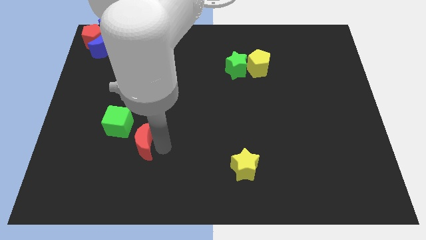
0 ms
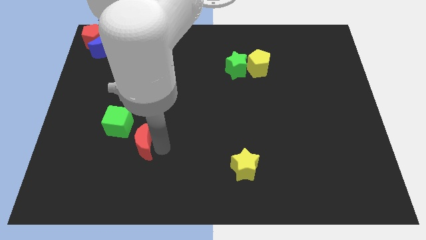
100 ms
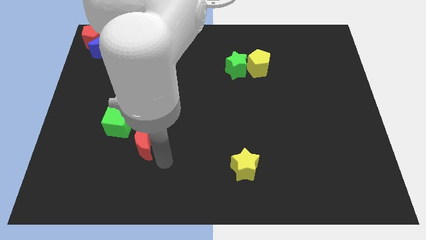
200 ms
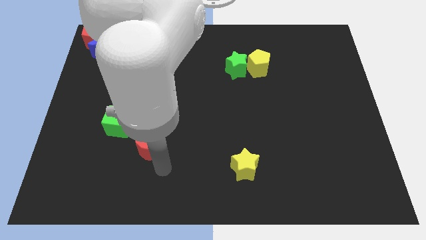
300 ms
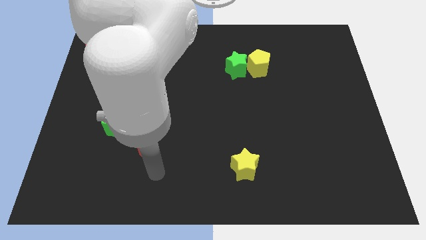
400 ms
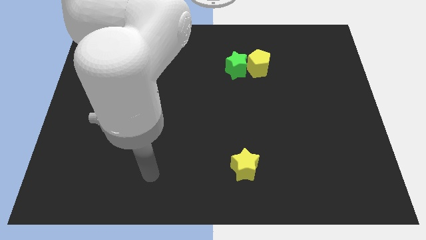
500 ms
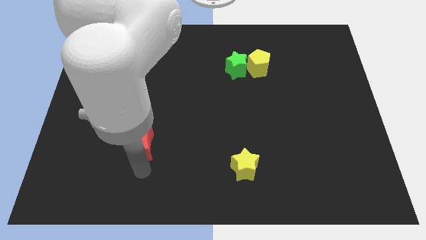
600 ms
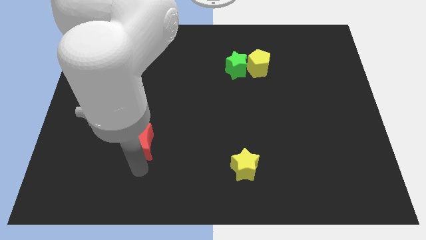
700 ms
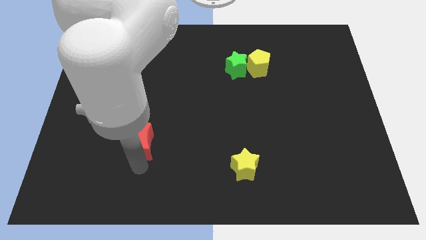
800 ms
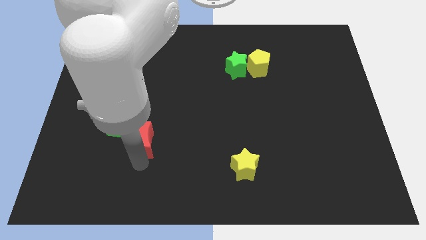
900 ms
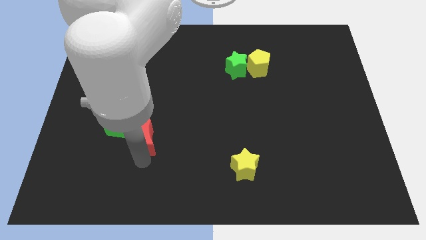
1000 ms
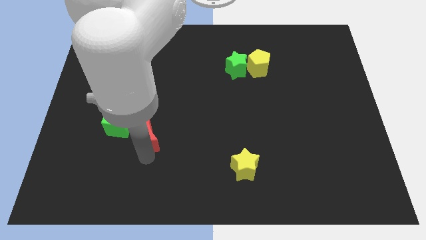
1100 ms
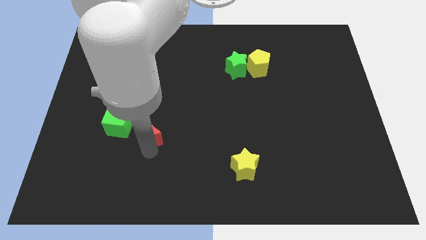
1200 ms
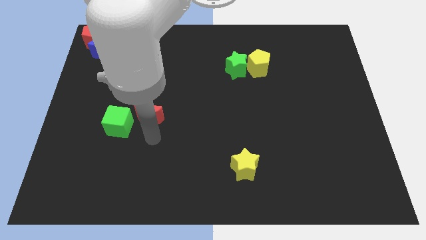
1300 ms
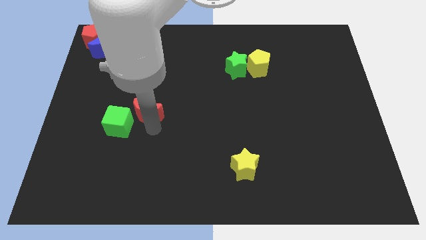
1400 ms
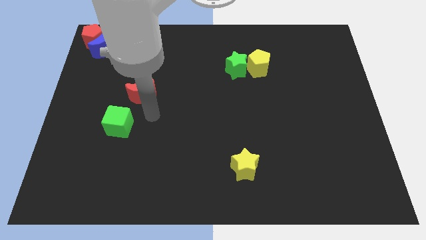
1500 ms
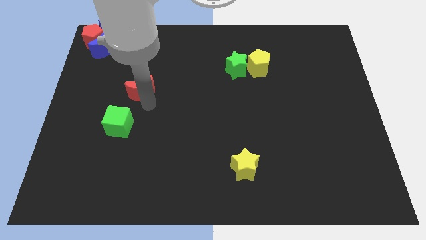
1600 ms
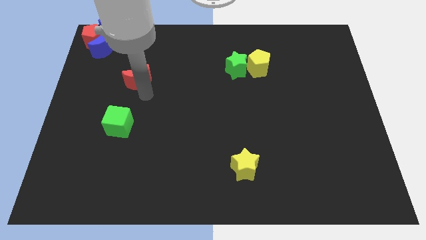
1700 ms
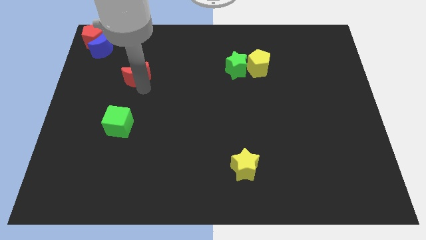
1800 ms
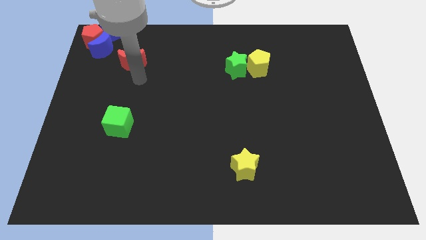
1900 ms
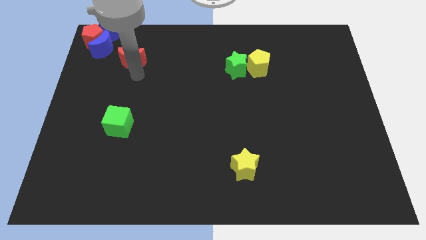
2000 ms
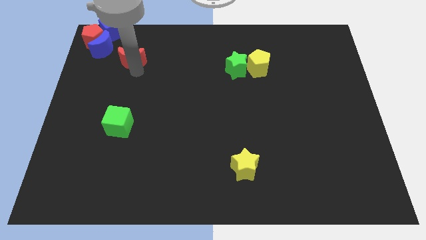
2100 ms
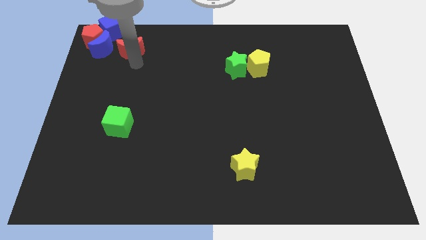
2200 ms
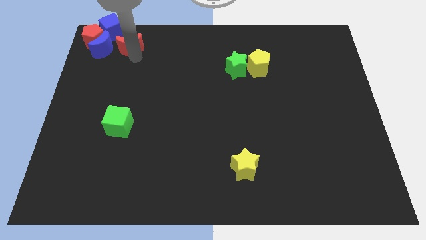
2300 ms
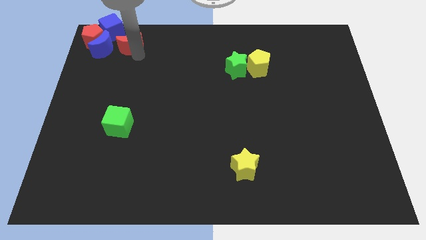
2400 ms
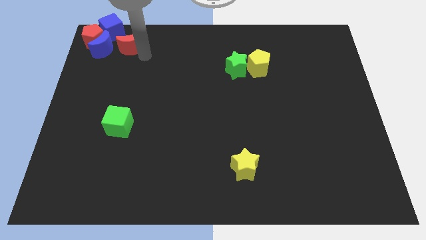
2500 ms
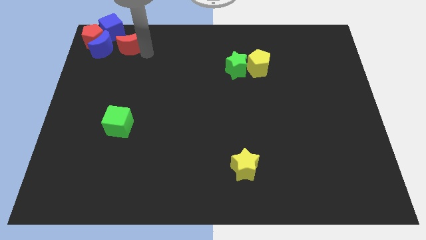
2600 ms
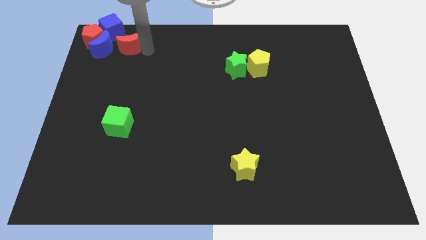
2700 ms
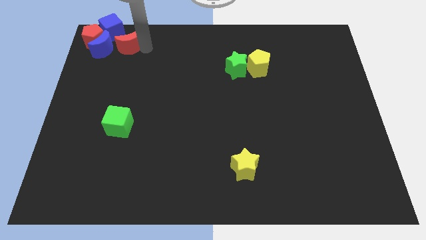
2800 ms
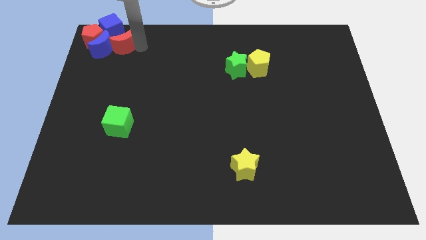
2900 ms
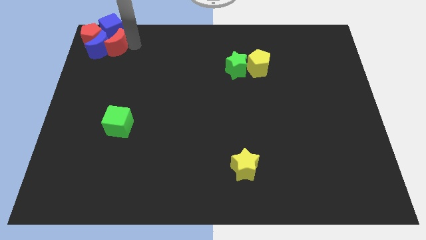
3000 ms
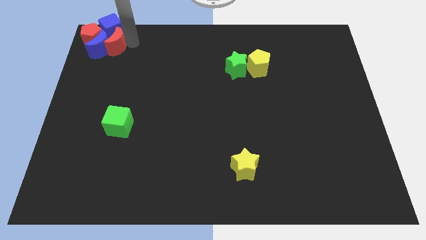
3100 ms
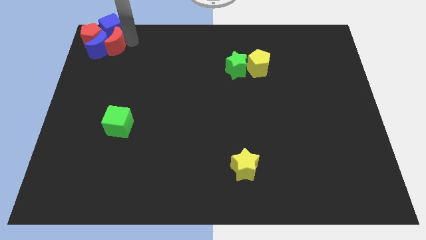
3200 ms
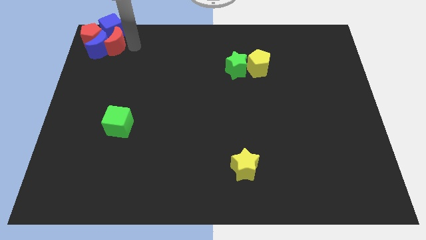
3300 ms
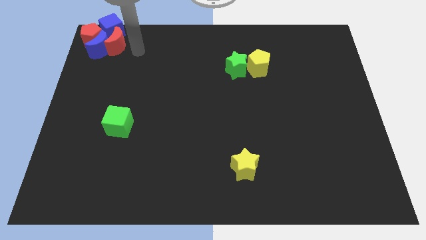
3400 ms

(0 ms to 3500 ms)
place the red crescent into the blue moon at the top left corner

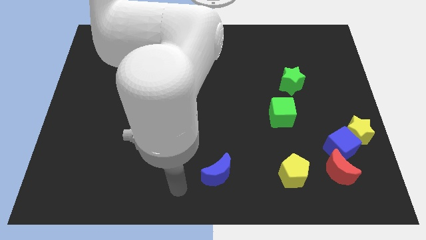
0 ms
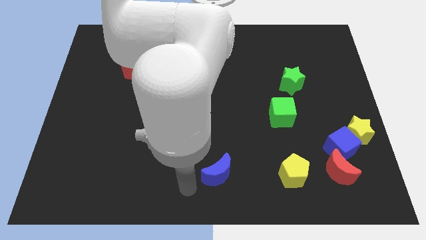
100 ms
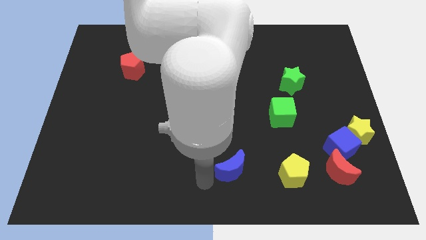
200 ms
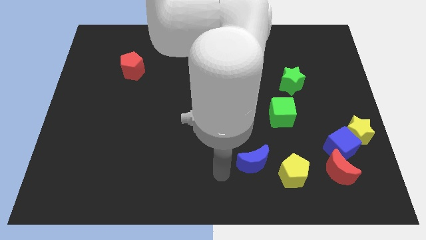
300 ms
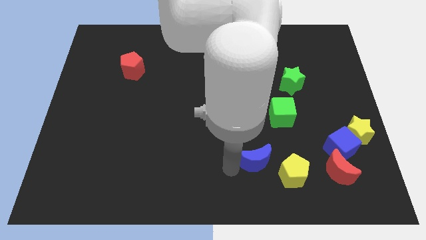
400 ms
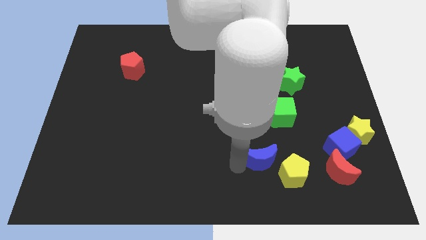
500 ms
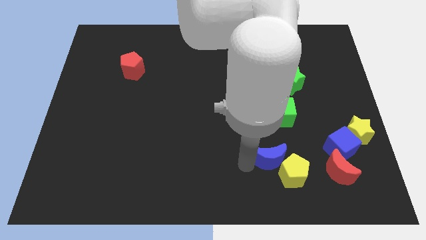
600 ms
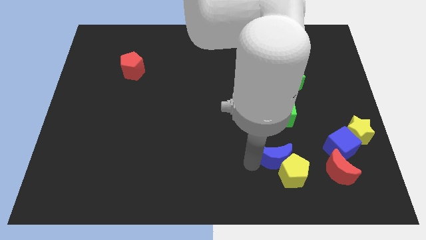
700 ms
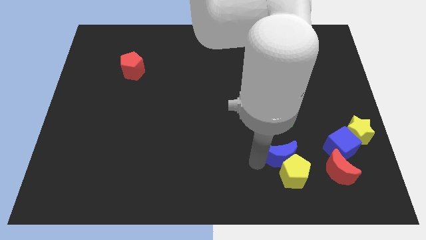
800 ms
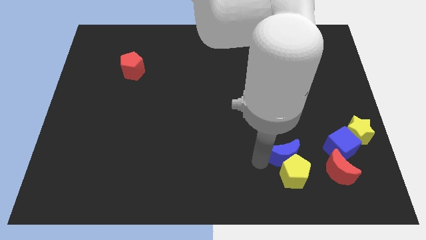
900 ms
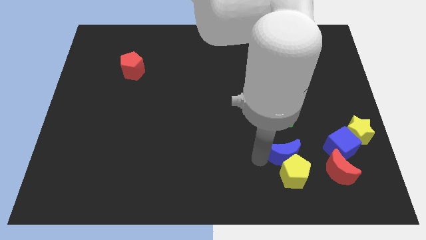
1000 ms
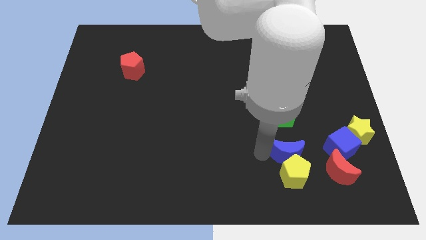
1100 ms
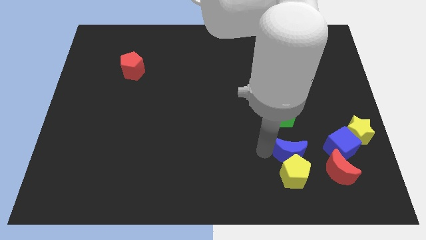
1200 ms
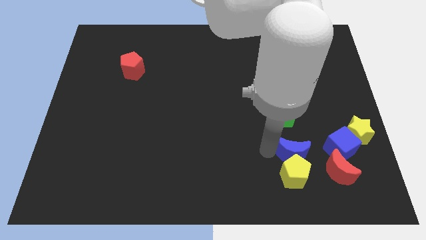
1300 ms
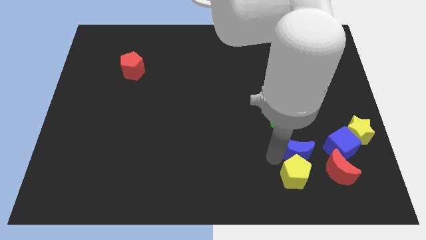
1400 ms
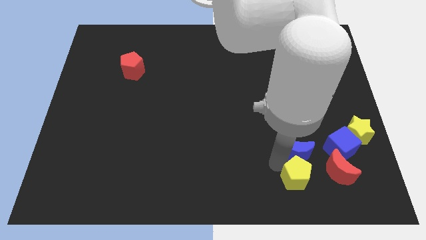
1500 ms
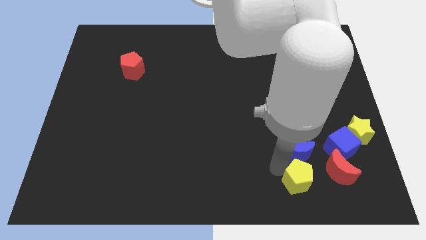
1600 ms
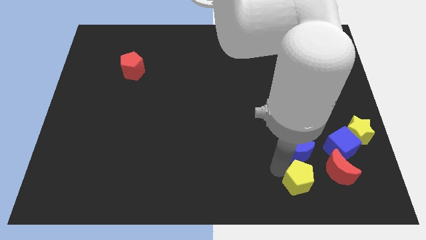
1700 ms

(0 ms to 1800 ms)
place the blue moon below the green cube

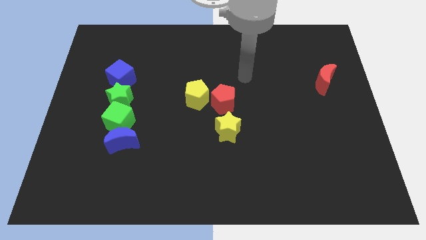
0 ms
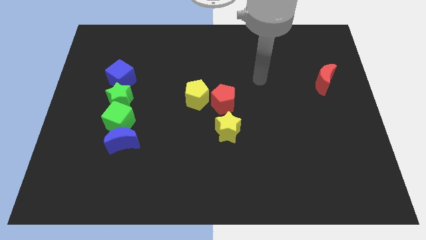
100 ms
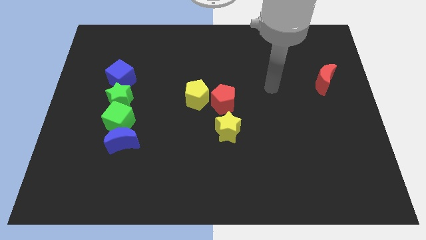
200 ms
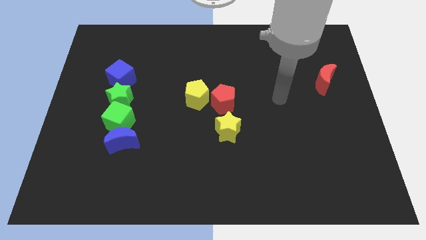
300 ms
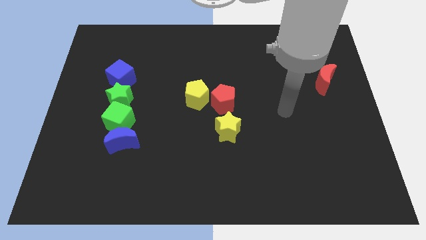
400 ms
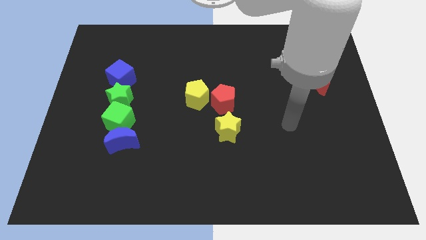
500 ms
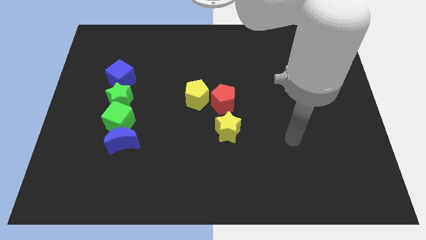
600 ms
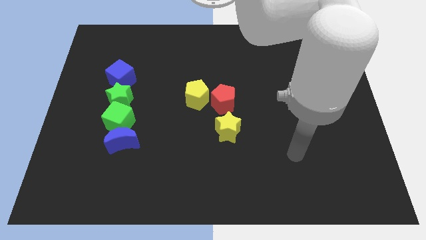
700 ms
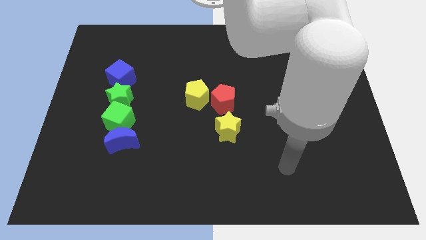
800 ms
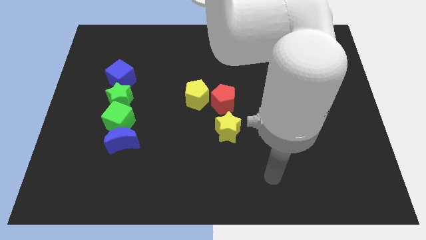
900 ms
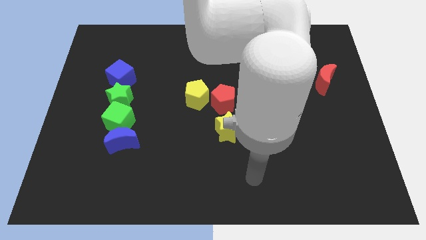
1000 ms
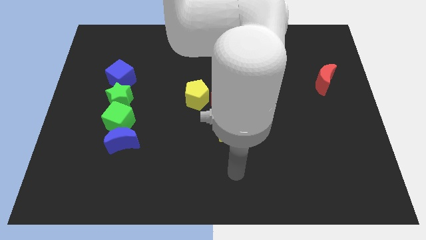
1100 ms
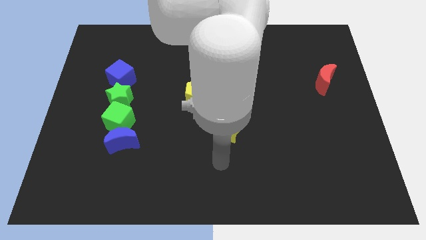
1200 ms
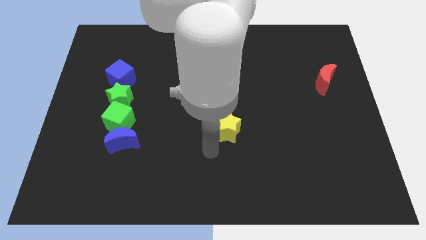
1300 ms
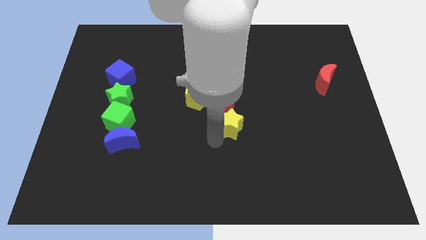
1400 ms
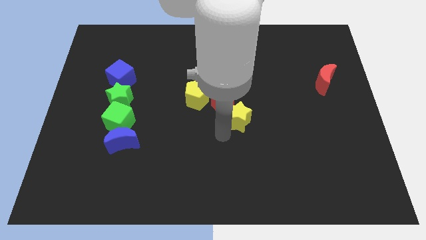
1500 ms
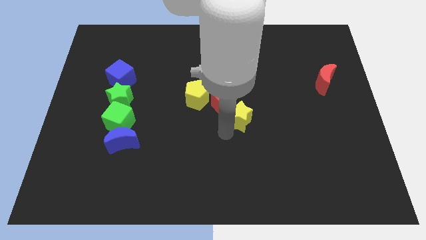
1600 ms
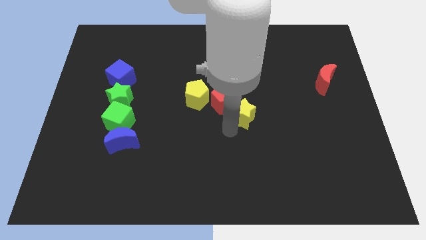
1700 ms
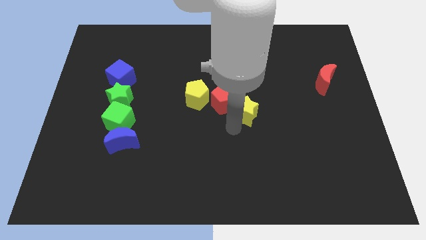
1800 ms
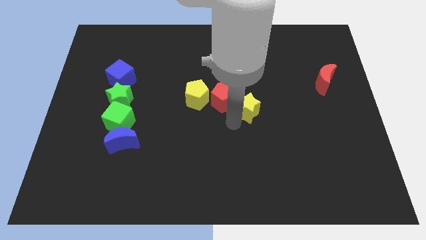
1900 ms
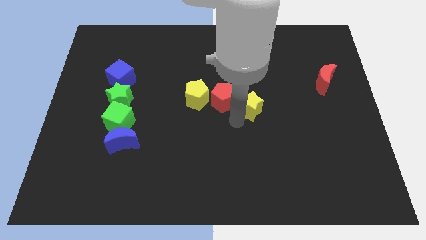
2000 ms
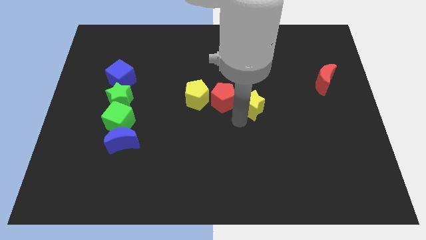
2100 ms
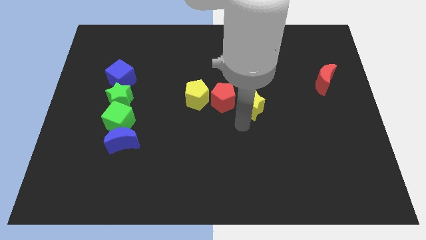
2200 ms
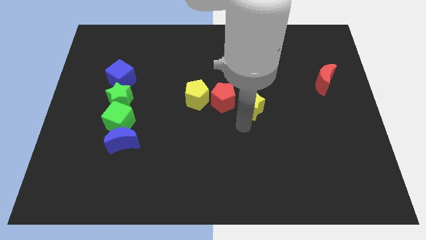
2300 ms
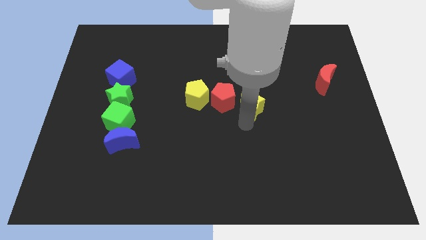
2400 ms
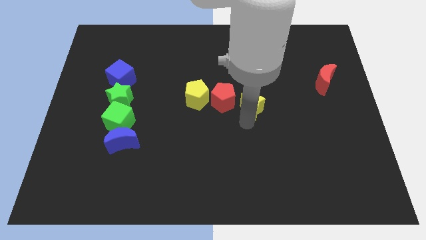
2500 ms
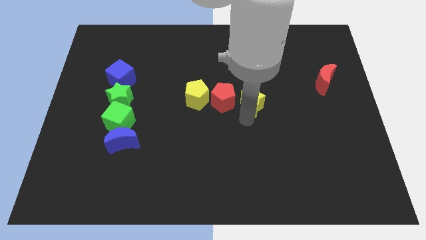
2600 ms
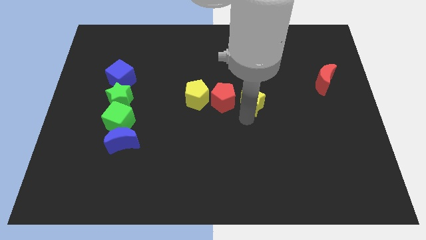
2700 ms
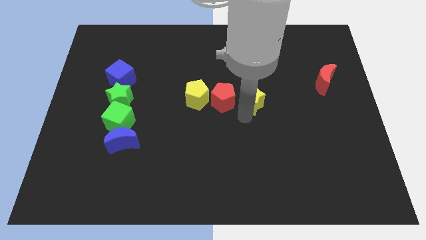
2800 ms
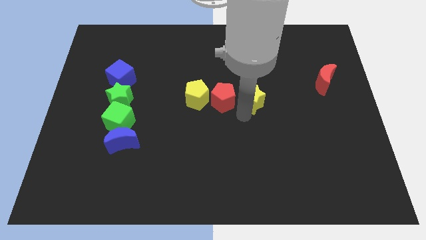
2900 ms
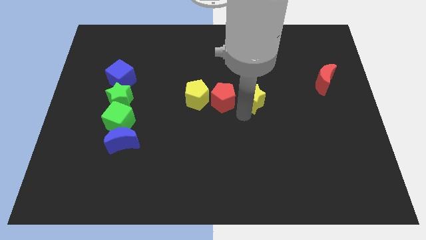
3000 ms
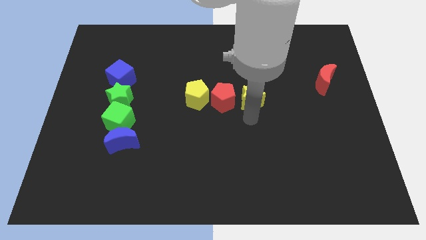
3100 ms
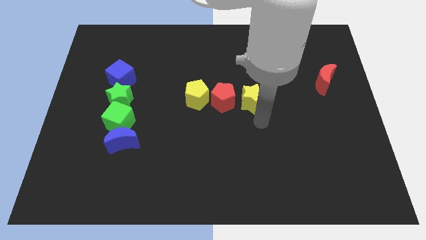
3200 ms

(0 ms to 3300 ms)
move the yellow star to the right of red pentagon

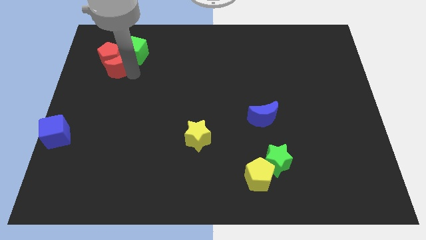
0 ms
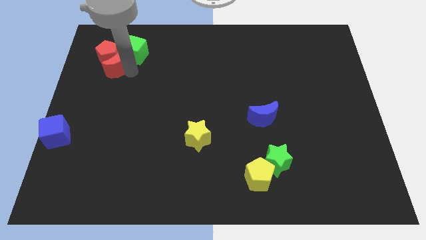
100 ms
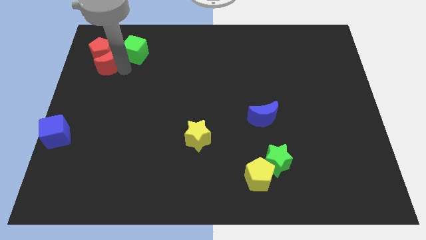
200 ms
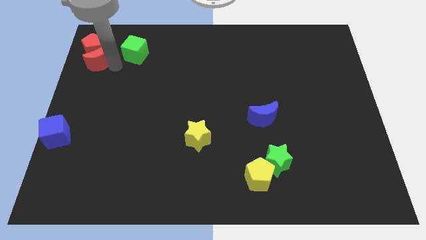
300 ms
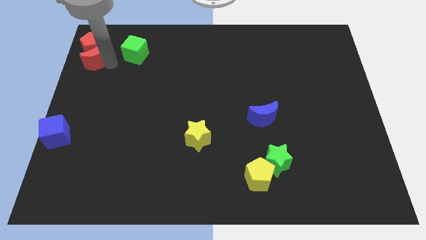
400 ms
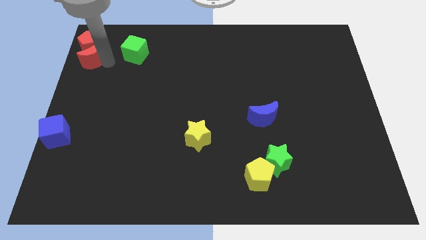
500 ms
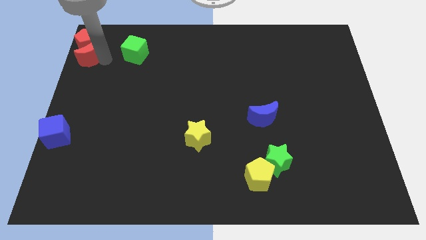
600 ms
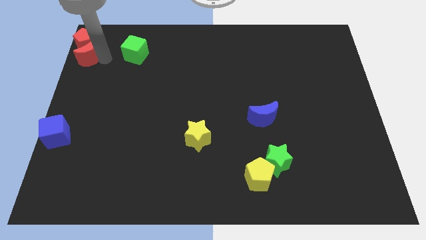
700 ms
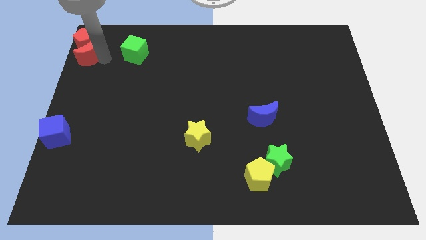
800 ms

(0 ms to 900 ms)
move red moon and red pentagon to the top left corner of the board
